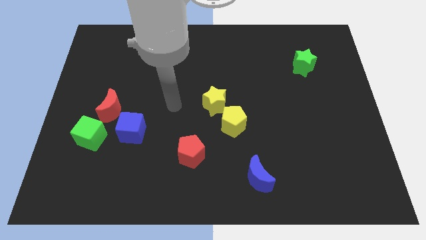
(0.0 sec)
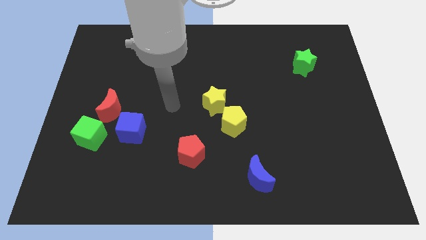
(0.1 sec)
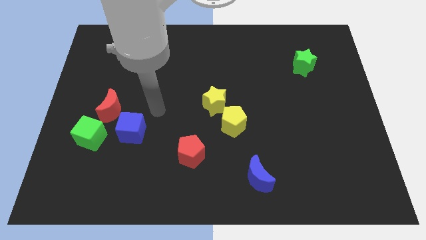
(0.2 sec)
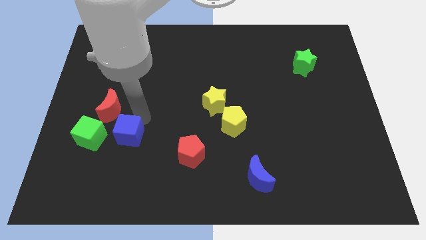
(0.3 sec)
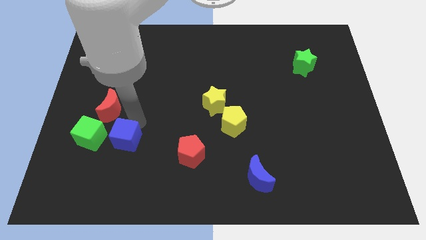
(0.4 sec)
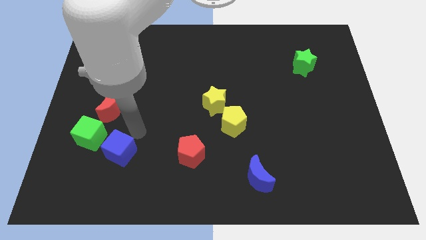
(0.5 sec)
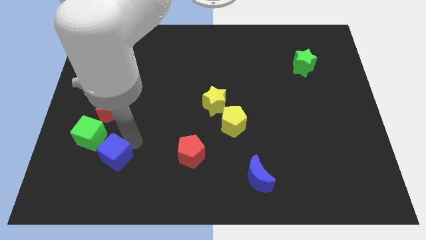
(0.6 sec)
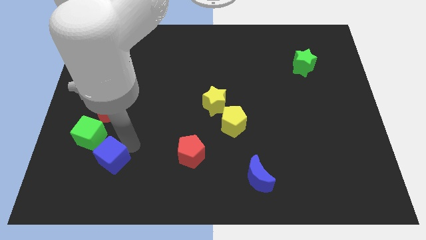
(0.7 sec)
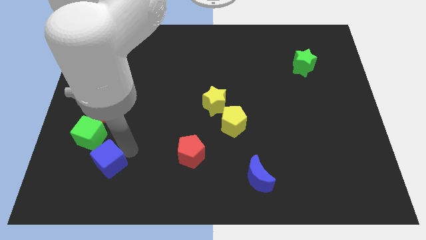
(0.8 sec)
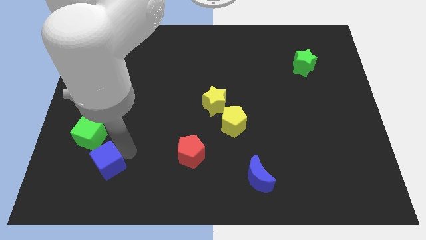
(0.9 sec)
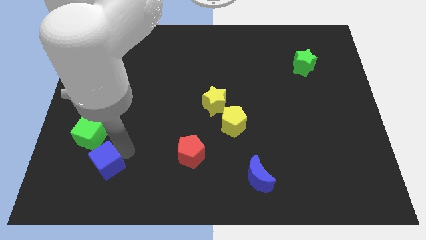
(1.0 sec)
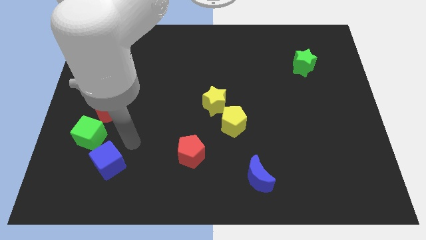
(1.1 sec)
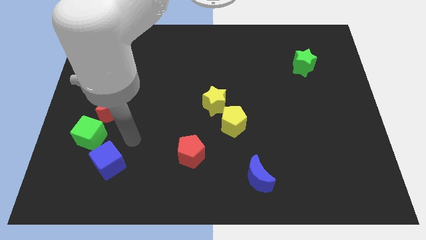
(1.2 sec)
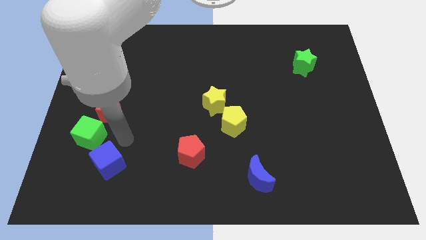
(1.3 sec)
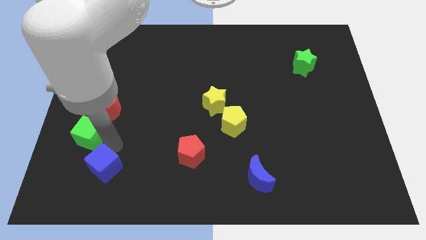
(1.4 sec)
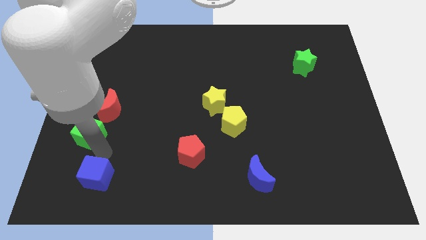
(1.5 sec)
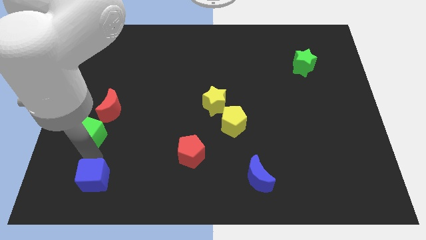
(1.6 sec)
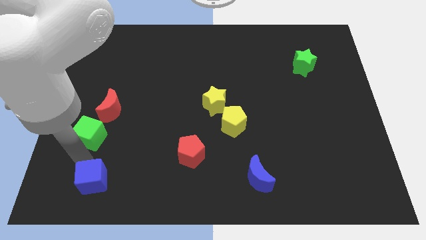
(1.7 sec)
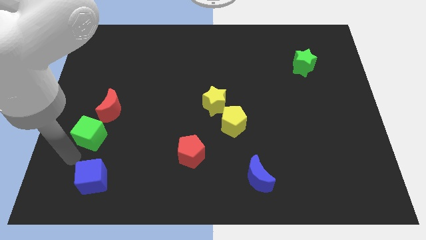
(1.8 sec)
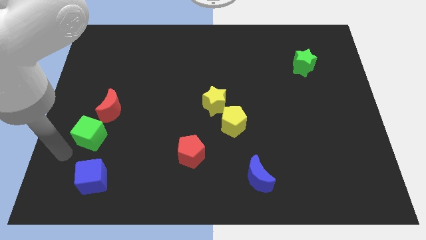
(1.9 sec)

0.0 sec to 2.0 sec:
move the blue cube to the bottom

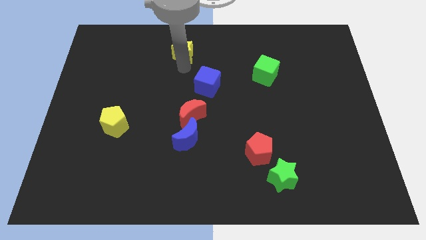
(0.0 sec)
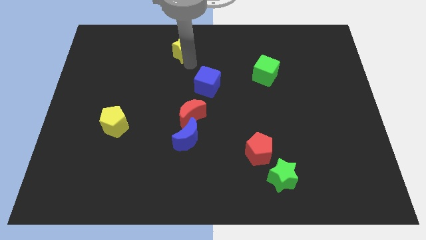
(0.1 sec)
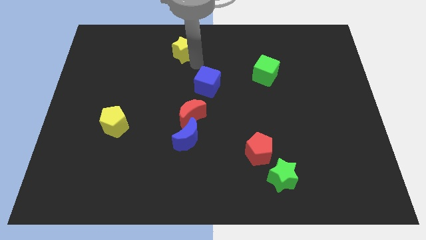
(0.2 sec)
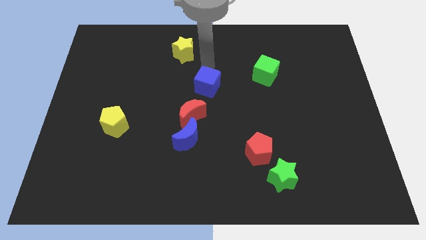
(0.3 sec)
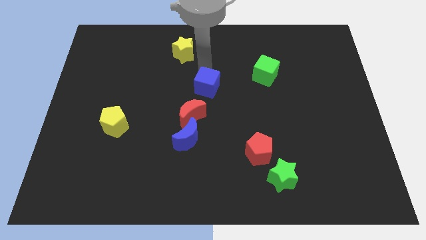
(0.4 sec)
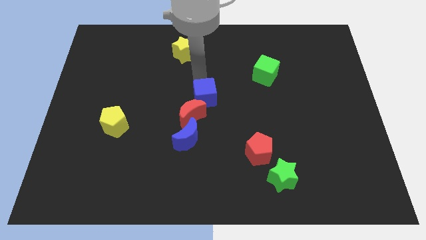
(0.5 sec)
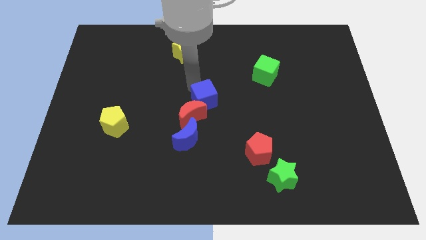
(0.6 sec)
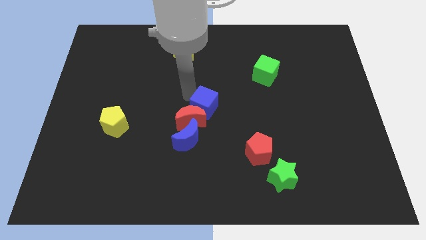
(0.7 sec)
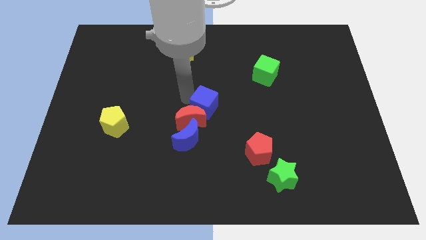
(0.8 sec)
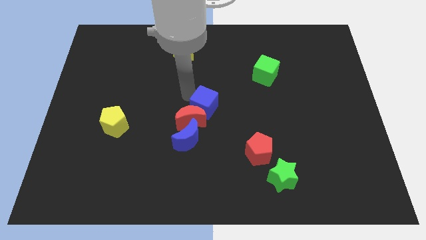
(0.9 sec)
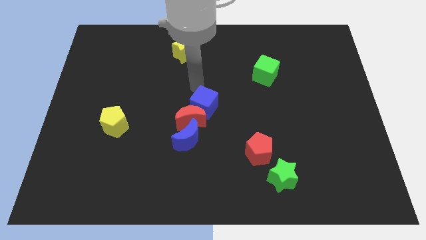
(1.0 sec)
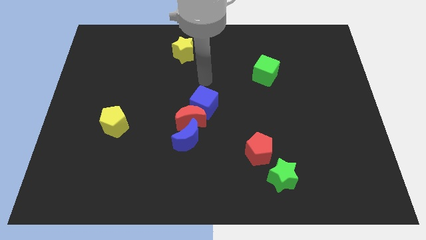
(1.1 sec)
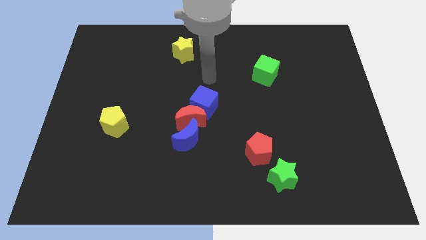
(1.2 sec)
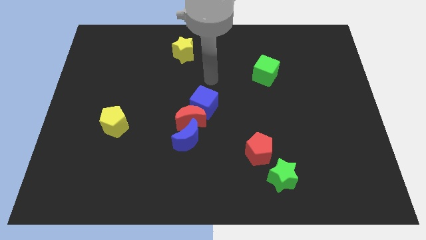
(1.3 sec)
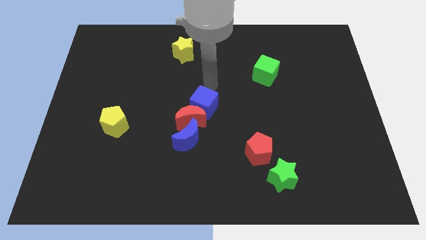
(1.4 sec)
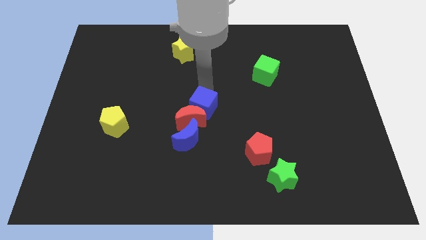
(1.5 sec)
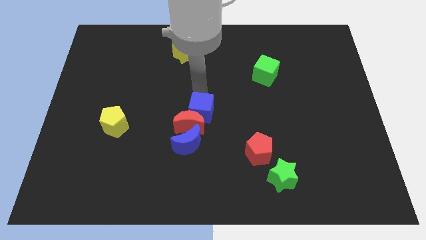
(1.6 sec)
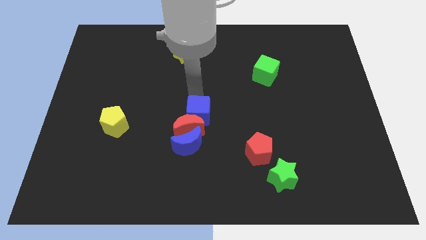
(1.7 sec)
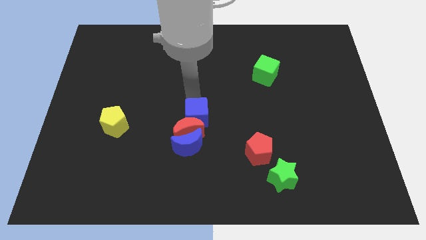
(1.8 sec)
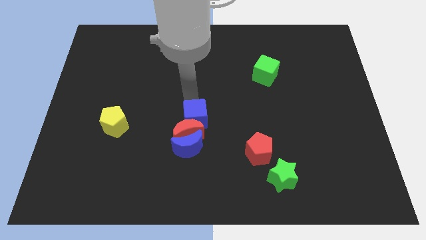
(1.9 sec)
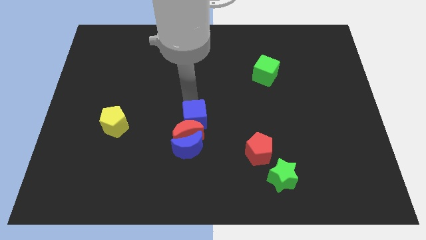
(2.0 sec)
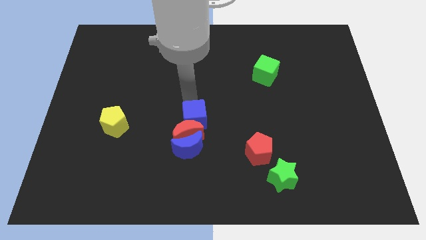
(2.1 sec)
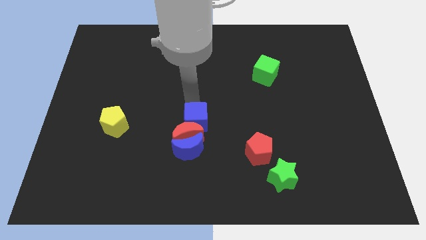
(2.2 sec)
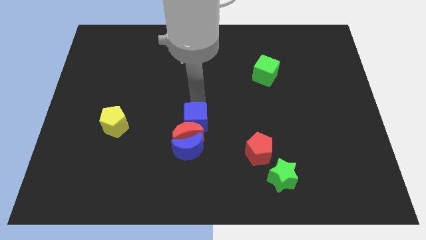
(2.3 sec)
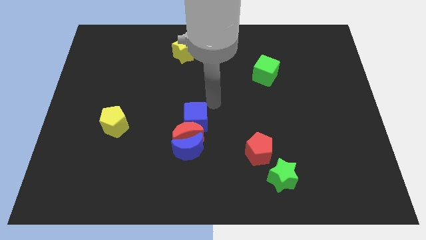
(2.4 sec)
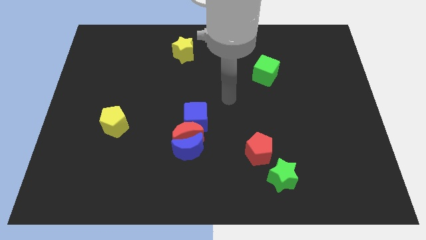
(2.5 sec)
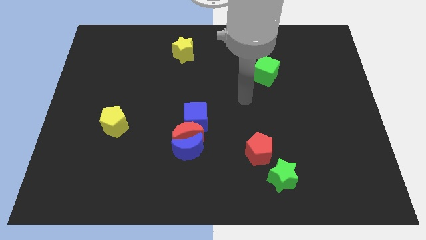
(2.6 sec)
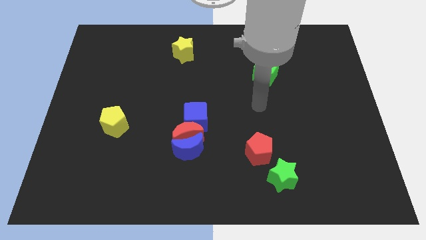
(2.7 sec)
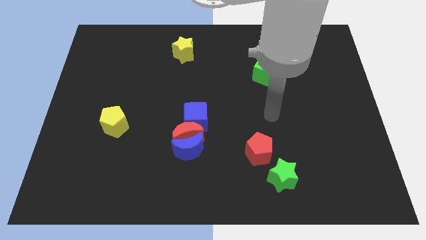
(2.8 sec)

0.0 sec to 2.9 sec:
push blue cube into the red crescent

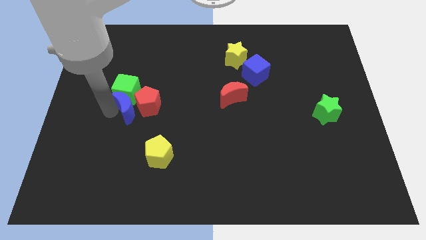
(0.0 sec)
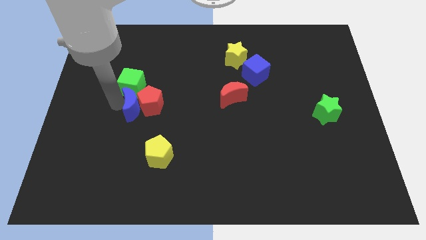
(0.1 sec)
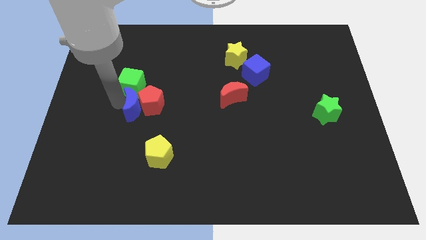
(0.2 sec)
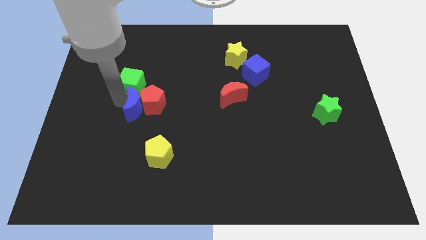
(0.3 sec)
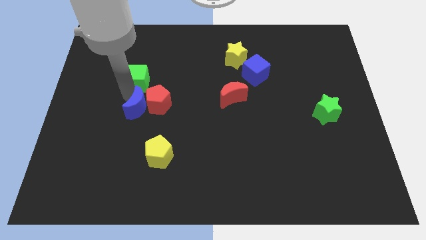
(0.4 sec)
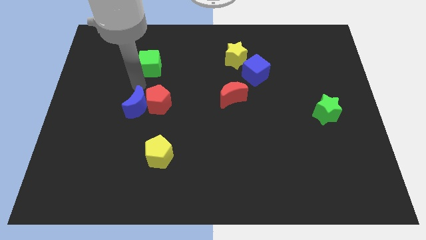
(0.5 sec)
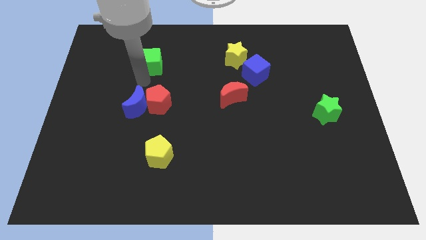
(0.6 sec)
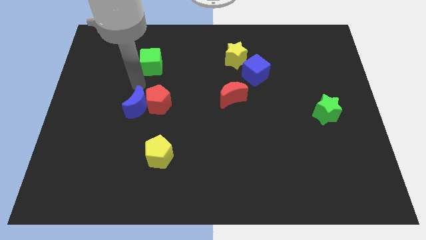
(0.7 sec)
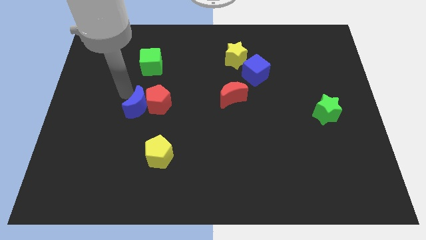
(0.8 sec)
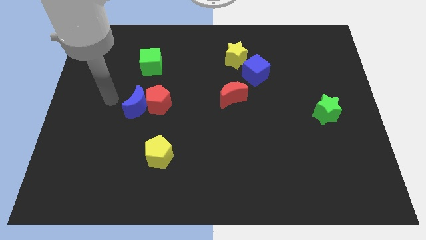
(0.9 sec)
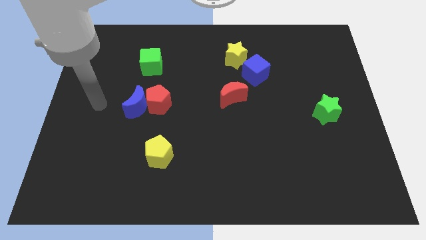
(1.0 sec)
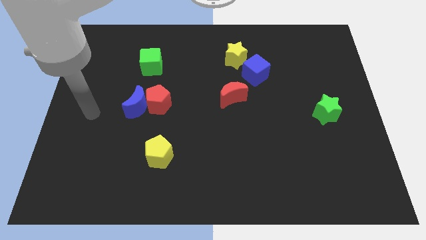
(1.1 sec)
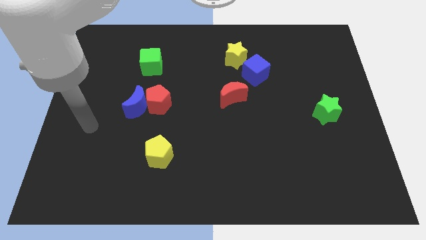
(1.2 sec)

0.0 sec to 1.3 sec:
move green cube above red pentagon

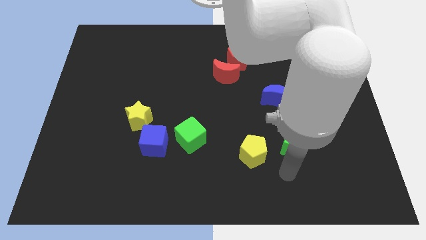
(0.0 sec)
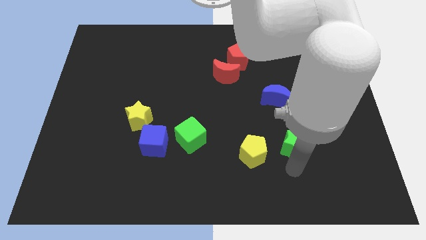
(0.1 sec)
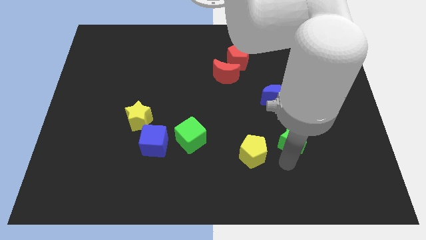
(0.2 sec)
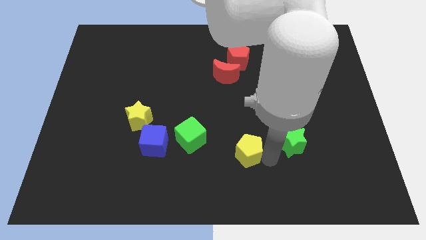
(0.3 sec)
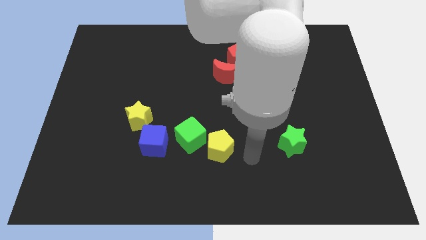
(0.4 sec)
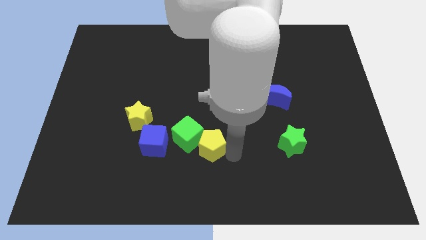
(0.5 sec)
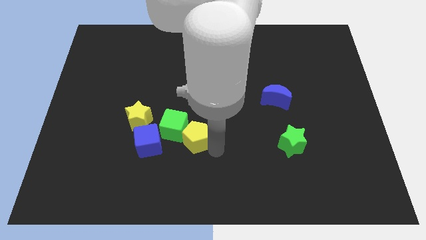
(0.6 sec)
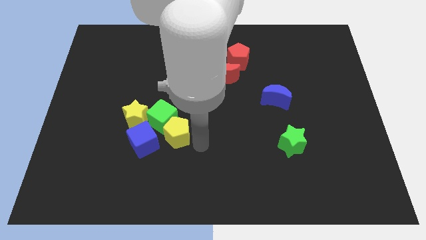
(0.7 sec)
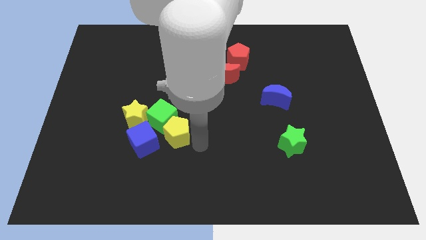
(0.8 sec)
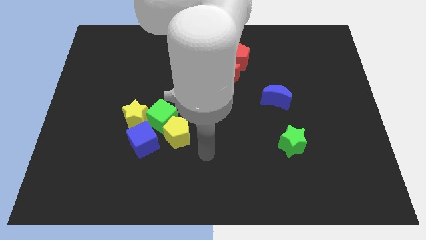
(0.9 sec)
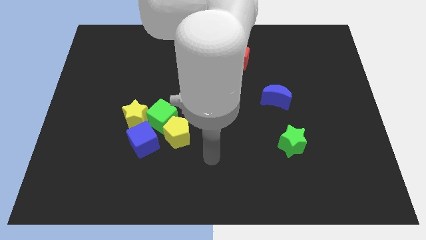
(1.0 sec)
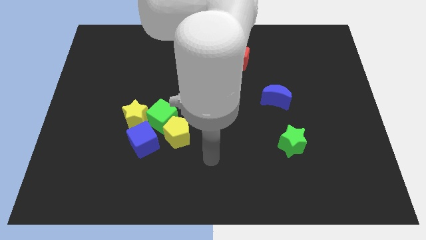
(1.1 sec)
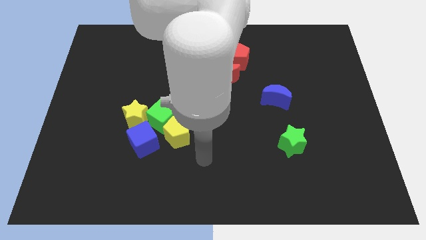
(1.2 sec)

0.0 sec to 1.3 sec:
push the yellow pentagon into the green cube

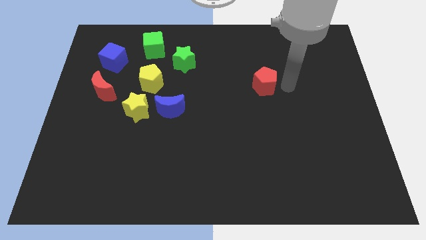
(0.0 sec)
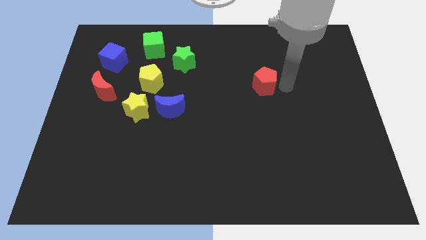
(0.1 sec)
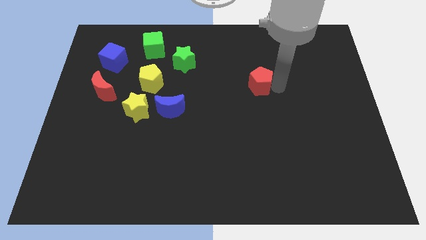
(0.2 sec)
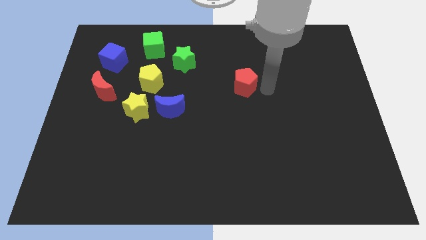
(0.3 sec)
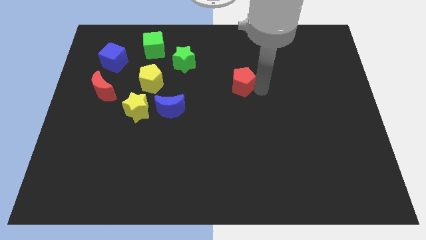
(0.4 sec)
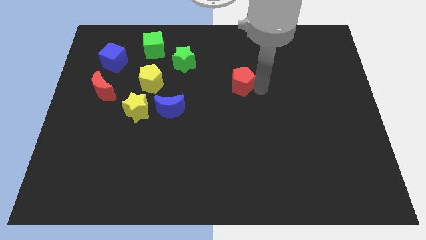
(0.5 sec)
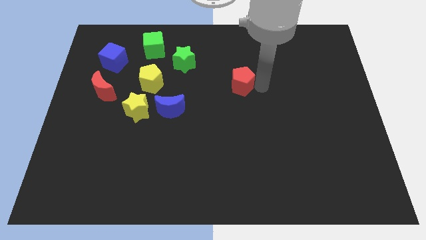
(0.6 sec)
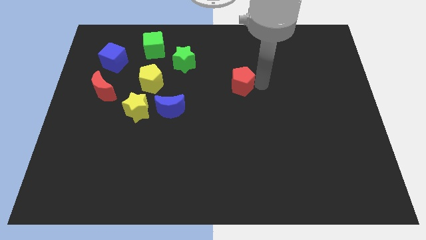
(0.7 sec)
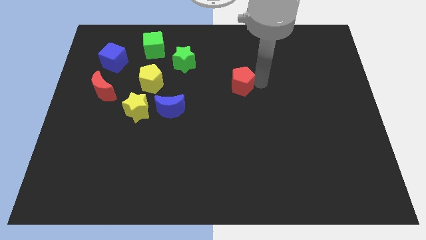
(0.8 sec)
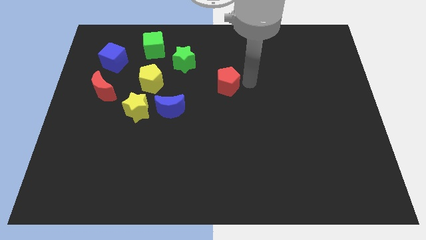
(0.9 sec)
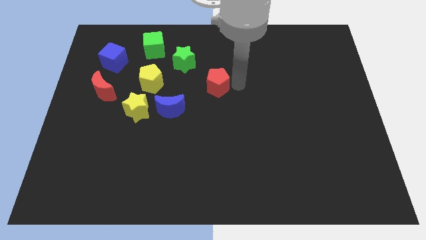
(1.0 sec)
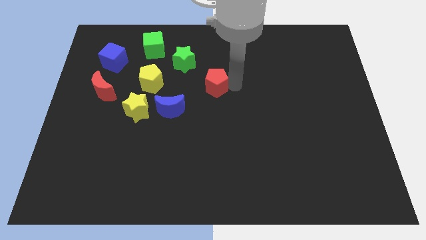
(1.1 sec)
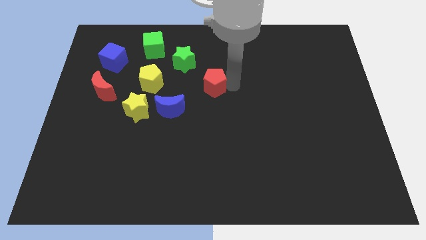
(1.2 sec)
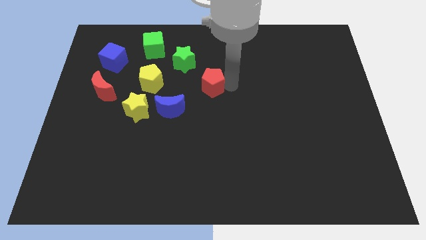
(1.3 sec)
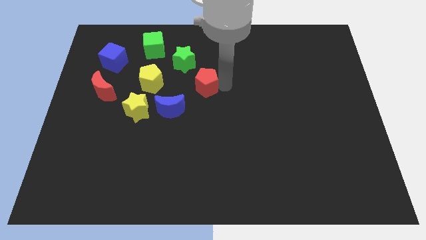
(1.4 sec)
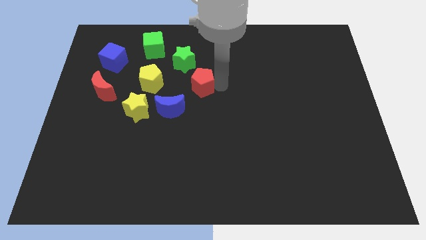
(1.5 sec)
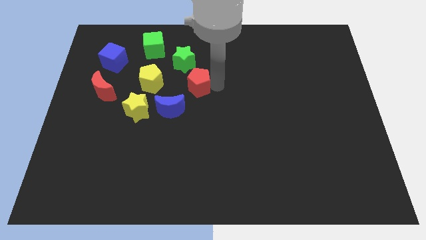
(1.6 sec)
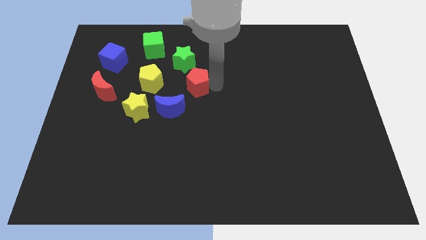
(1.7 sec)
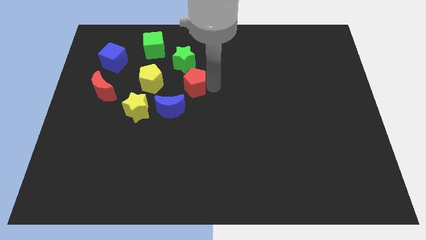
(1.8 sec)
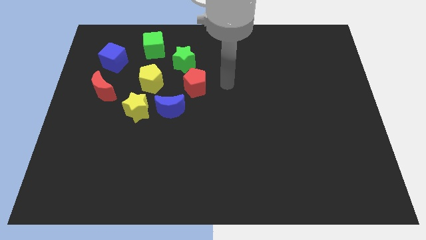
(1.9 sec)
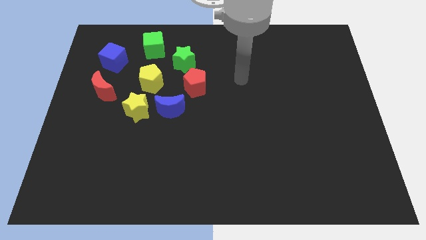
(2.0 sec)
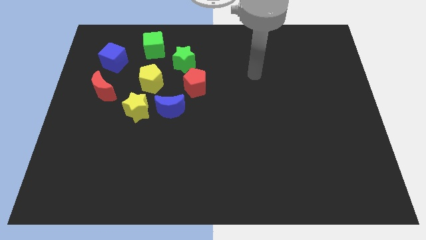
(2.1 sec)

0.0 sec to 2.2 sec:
place red pentagon parallel to yellow pentagon
